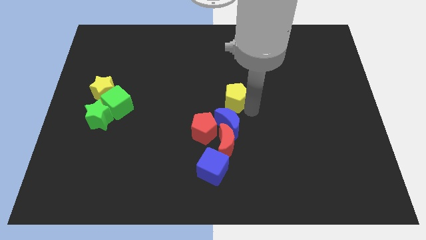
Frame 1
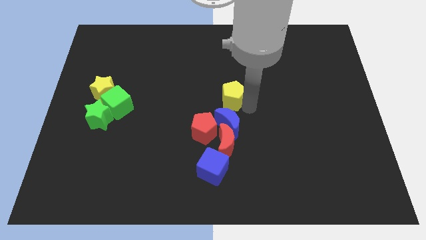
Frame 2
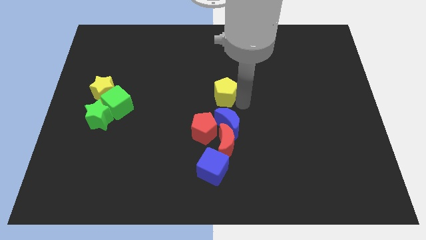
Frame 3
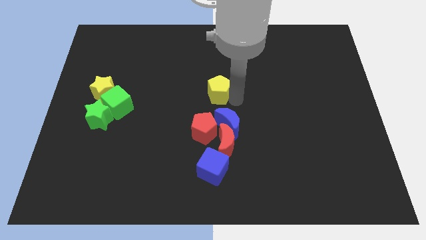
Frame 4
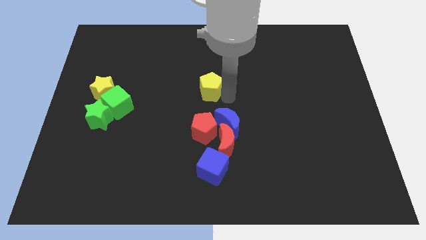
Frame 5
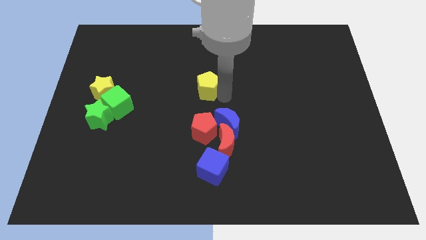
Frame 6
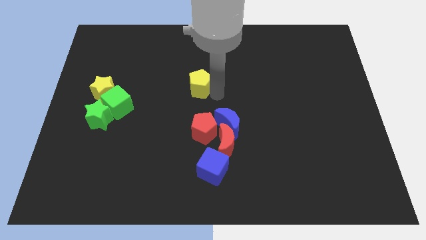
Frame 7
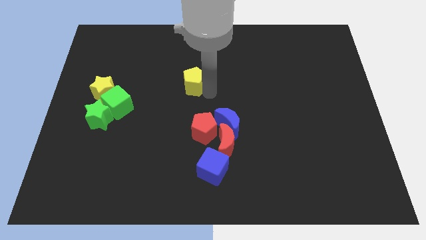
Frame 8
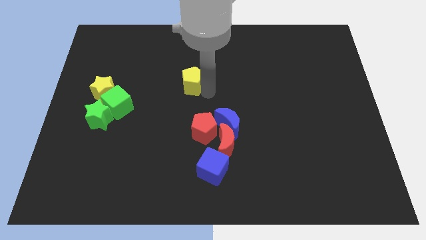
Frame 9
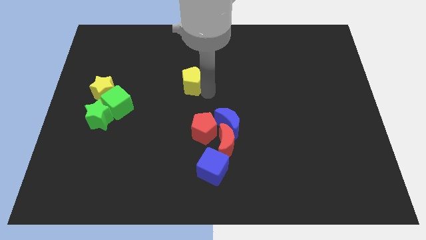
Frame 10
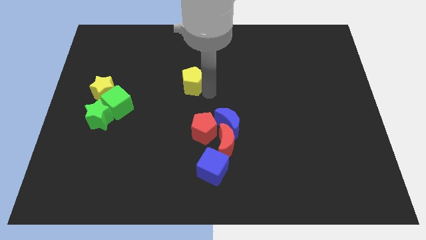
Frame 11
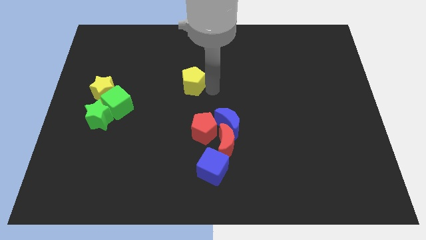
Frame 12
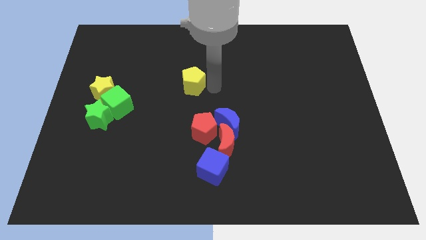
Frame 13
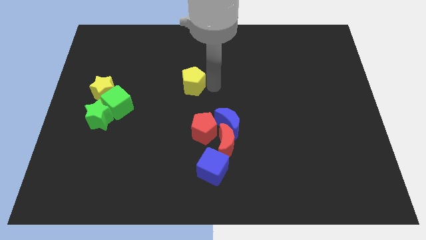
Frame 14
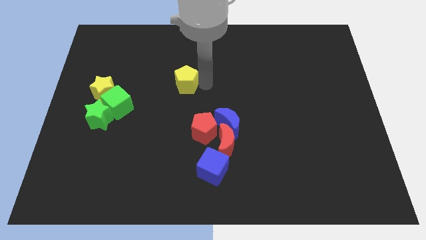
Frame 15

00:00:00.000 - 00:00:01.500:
move the yellow pentagon towards left side

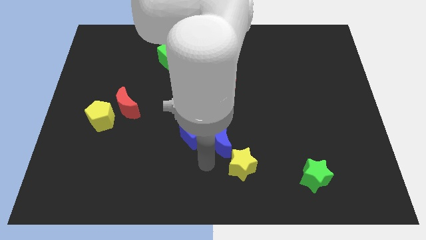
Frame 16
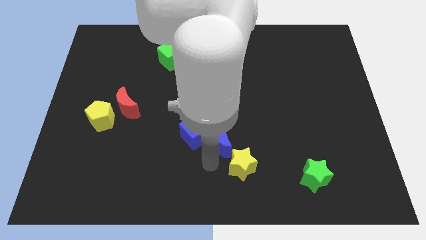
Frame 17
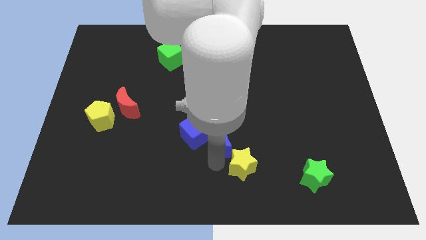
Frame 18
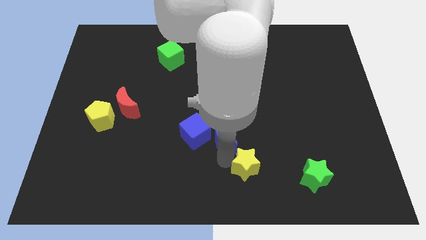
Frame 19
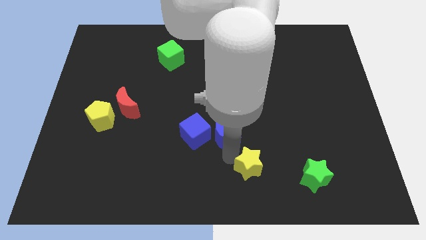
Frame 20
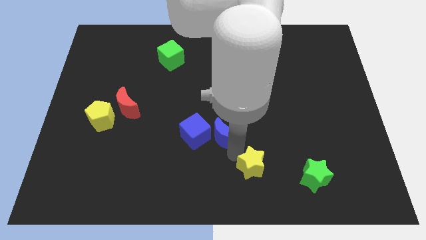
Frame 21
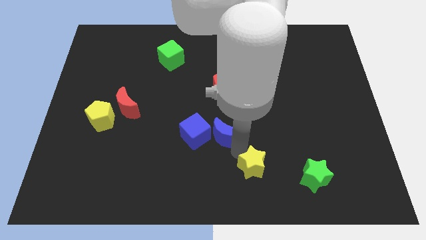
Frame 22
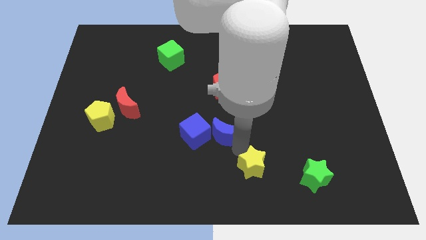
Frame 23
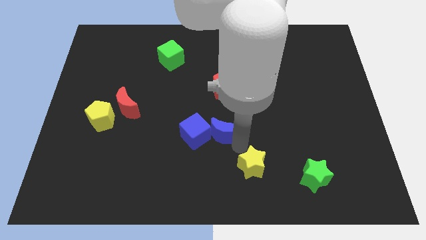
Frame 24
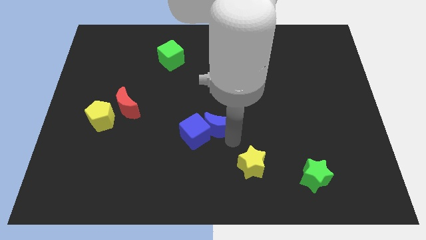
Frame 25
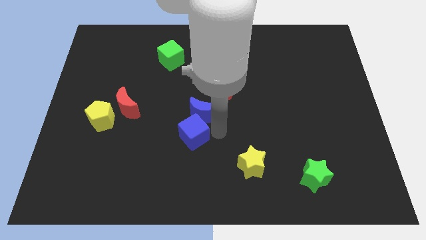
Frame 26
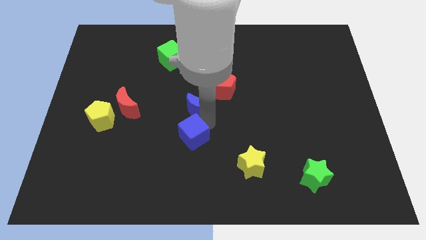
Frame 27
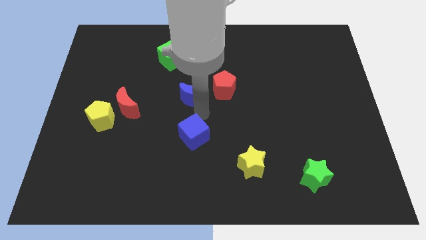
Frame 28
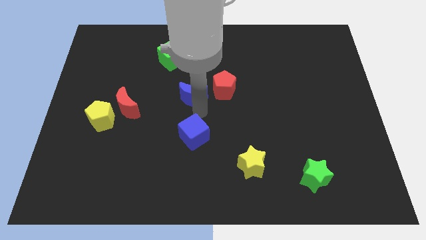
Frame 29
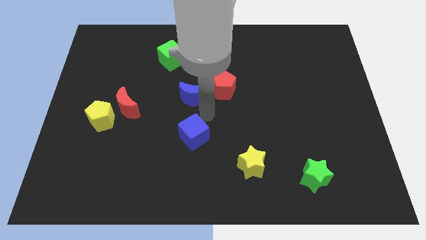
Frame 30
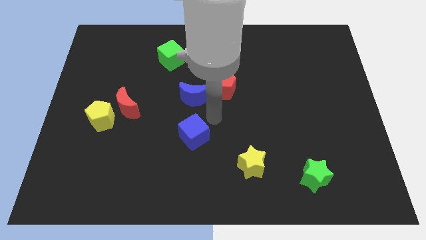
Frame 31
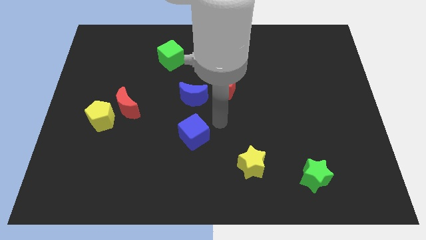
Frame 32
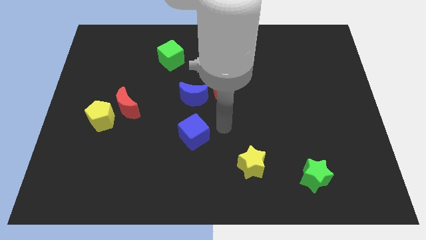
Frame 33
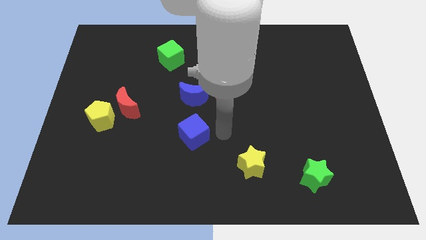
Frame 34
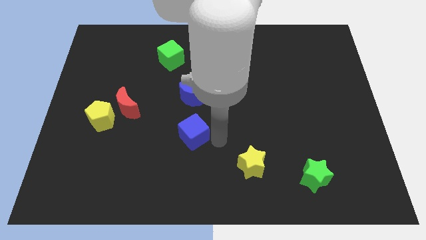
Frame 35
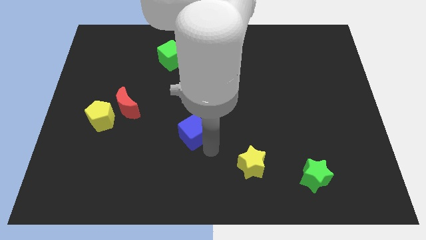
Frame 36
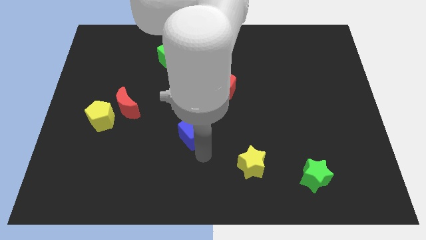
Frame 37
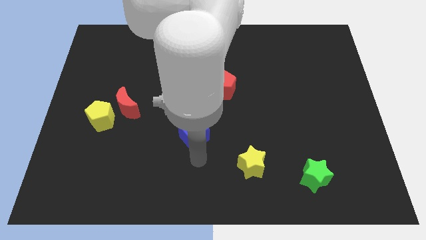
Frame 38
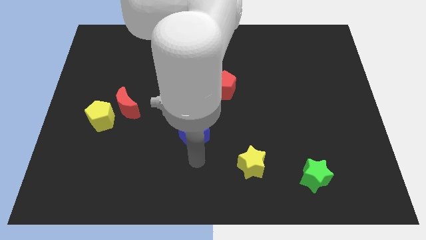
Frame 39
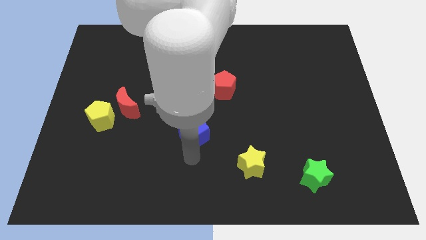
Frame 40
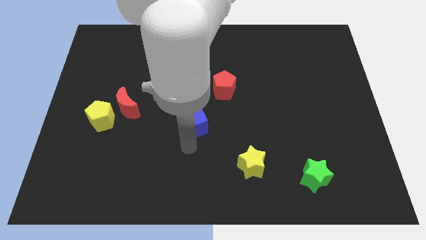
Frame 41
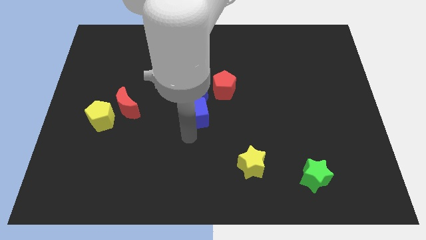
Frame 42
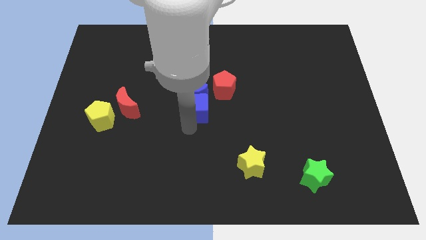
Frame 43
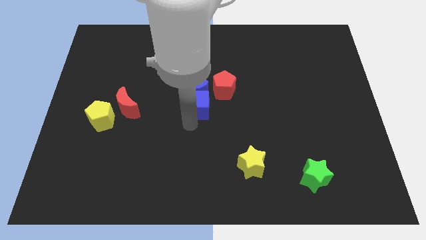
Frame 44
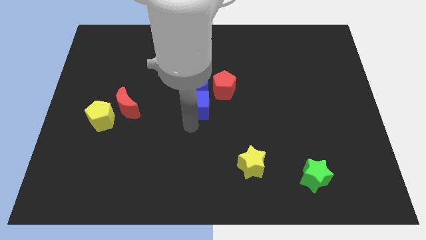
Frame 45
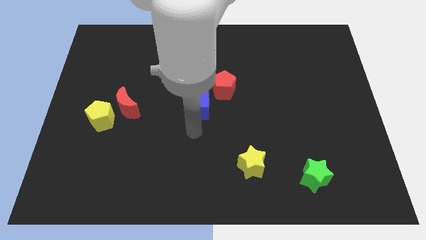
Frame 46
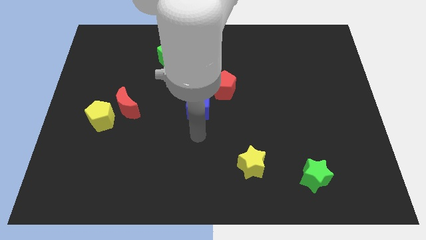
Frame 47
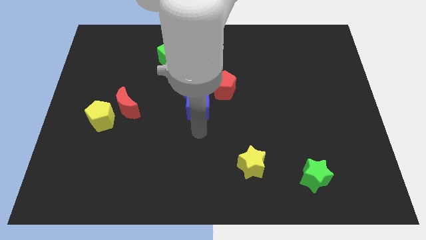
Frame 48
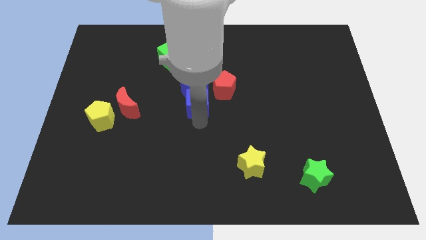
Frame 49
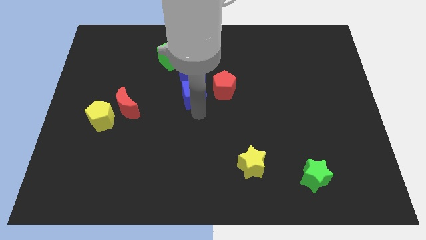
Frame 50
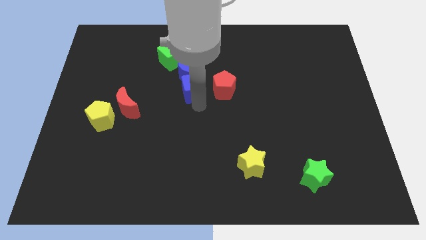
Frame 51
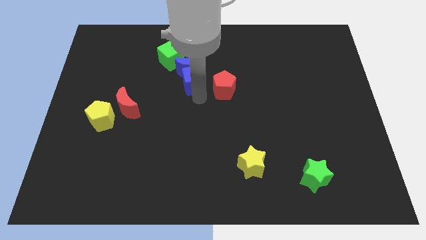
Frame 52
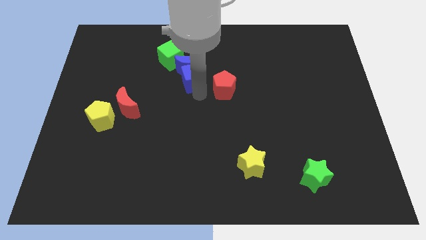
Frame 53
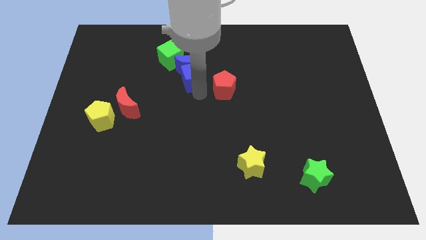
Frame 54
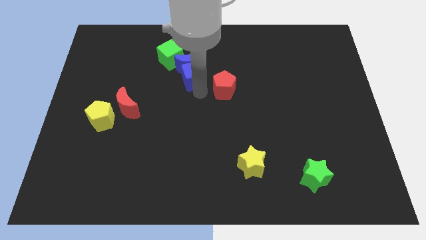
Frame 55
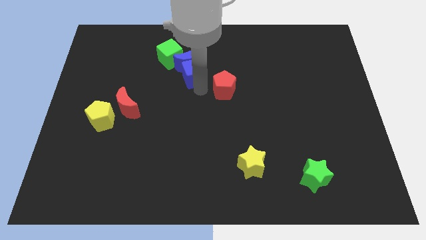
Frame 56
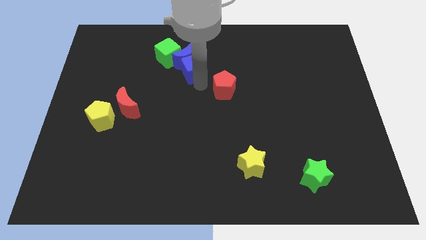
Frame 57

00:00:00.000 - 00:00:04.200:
move the blue blocks upwards

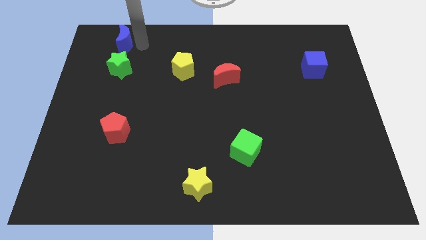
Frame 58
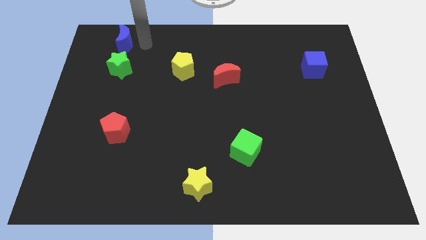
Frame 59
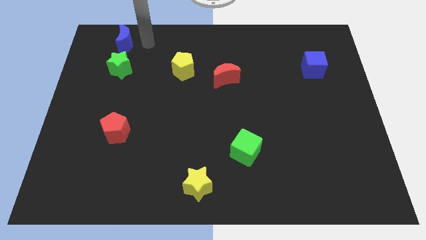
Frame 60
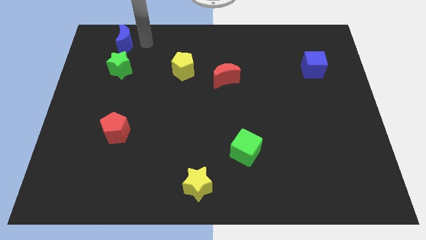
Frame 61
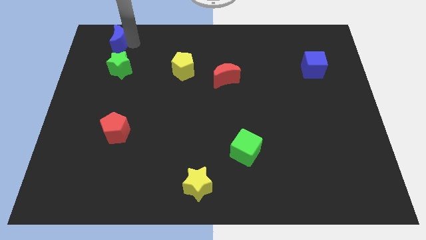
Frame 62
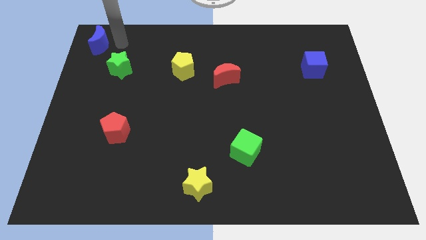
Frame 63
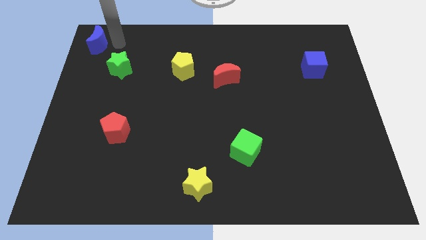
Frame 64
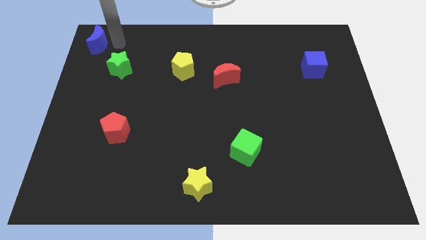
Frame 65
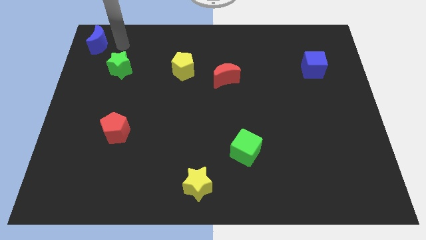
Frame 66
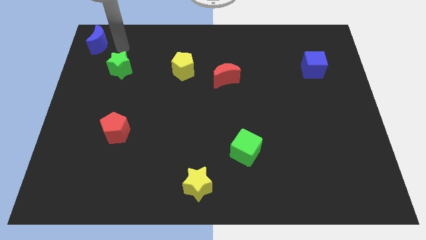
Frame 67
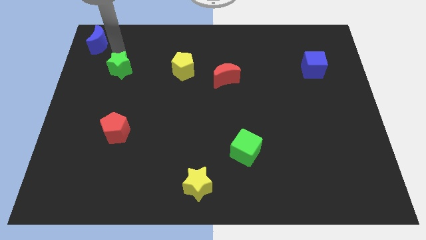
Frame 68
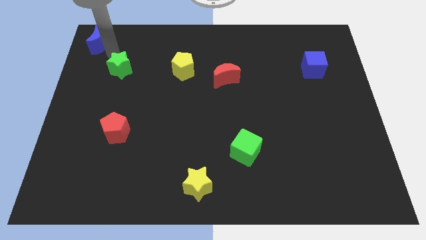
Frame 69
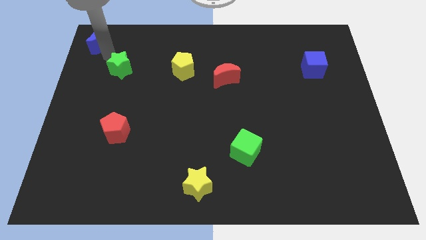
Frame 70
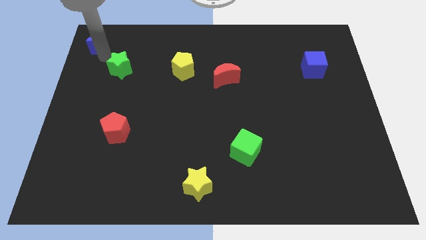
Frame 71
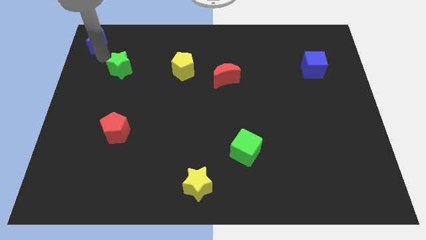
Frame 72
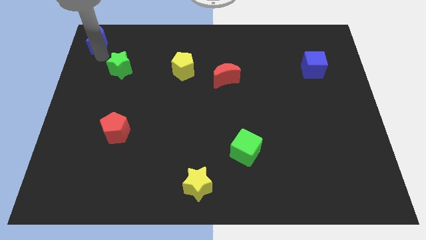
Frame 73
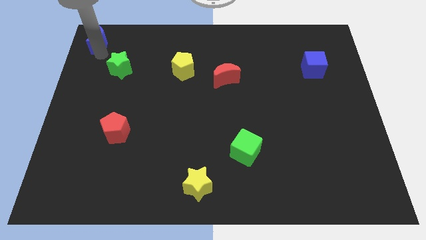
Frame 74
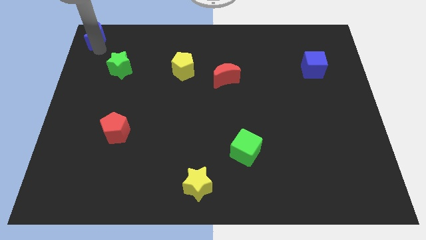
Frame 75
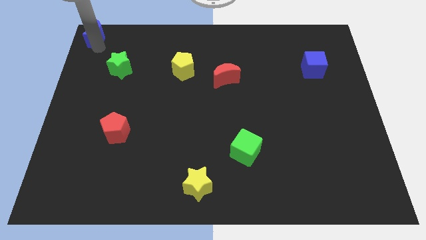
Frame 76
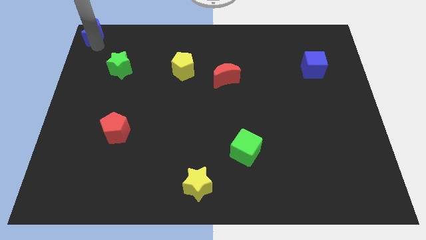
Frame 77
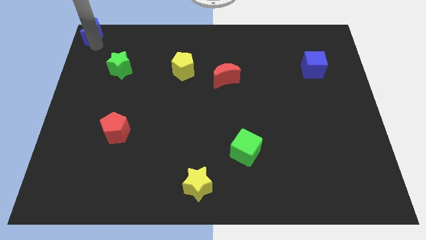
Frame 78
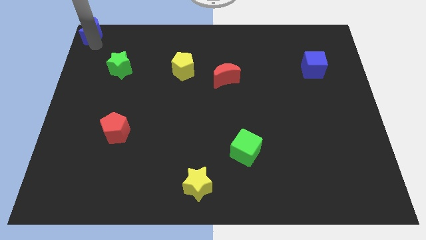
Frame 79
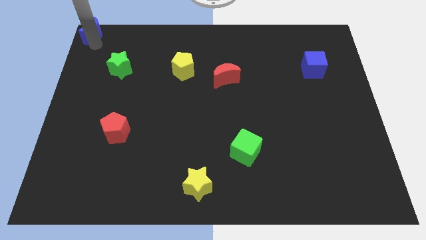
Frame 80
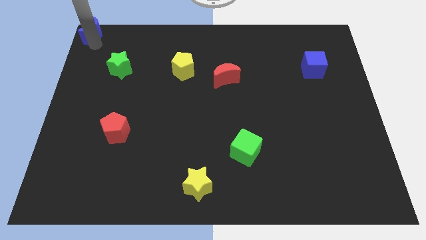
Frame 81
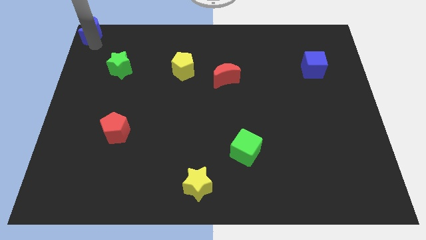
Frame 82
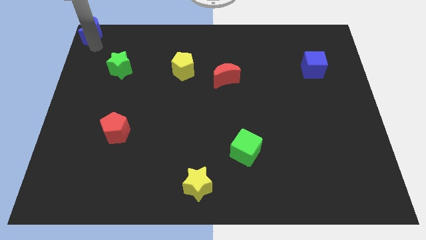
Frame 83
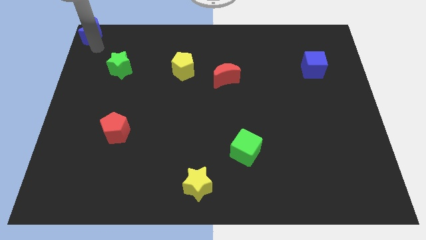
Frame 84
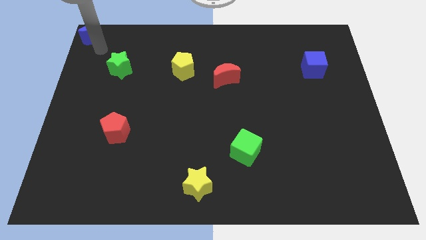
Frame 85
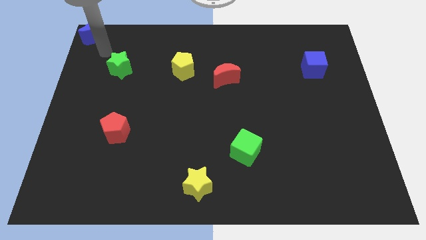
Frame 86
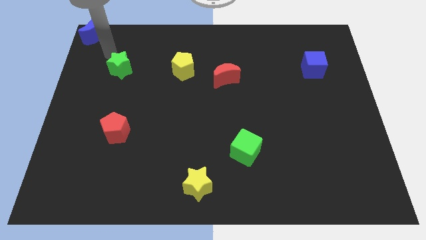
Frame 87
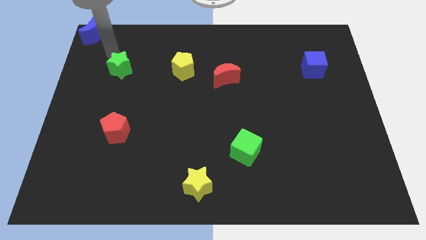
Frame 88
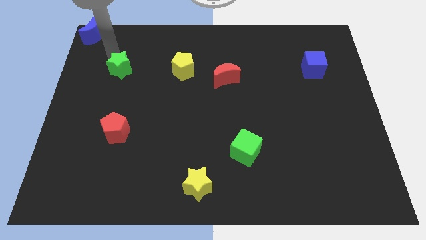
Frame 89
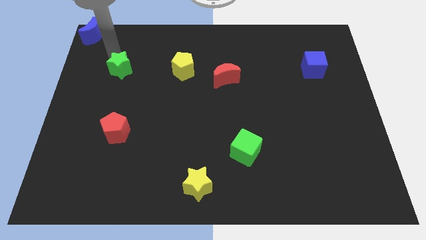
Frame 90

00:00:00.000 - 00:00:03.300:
push the blue crescent to the top left corner of the board
